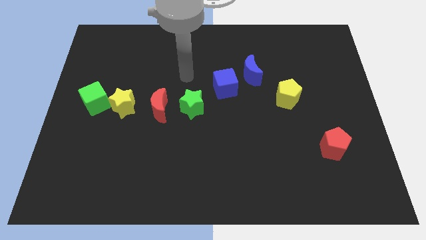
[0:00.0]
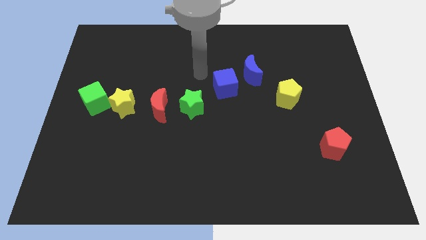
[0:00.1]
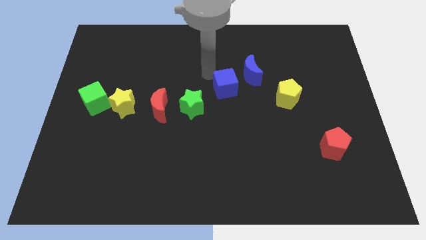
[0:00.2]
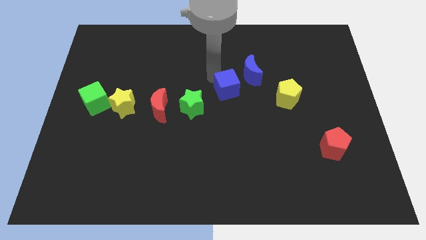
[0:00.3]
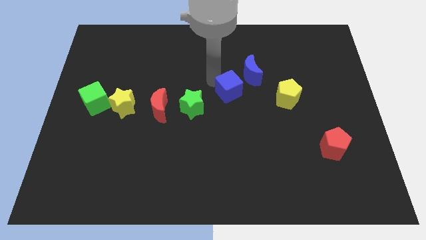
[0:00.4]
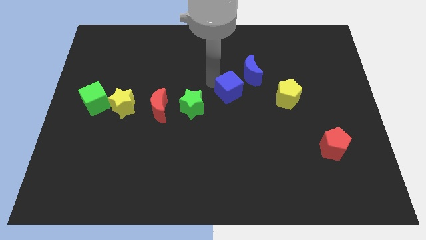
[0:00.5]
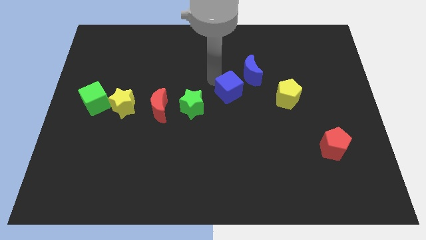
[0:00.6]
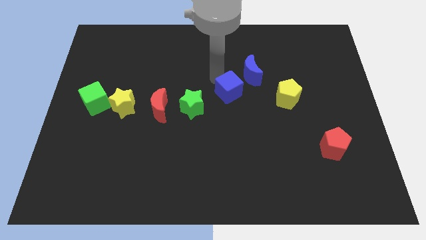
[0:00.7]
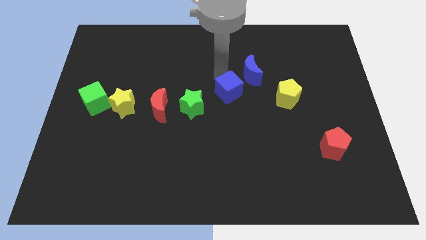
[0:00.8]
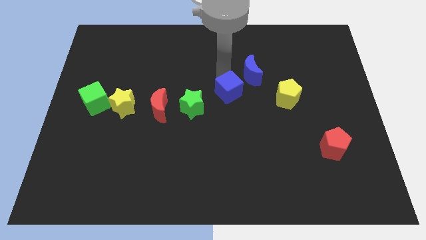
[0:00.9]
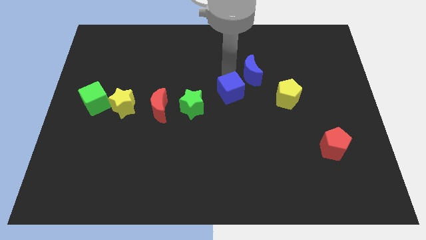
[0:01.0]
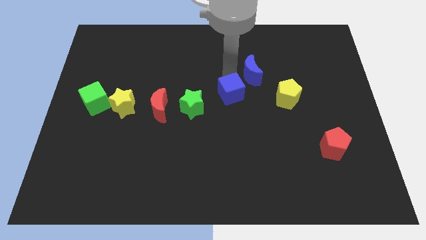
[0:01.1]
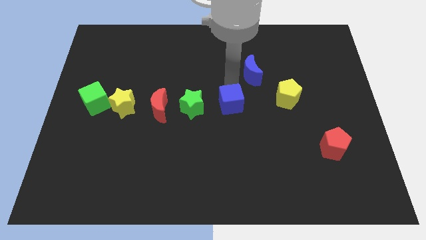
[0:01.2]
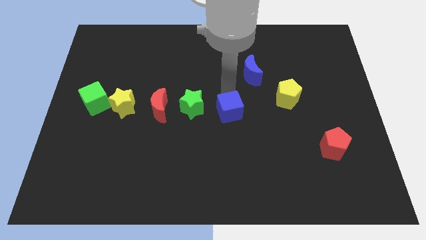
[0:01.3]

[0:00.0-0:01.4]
move the blue cube to the center of the board

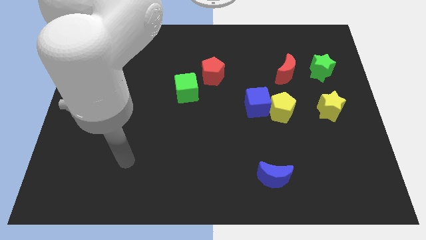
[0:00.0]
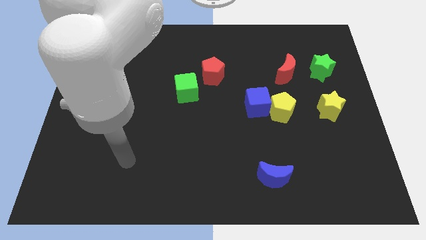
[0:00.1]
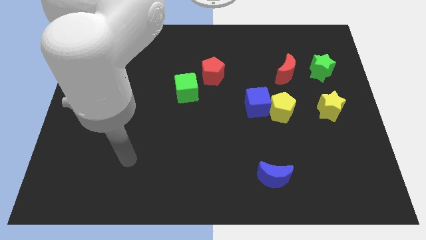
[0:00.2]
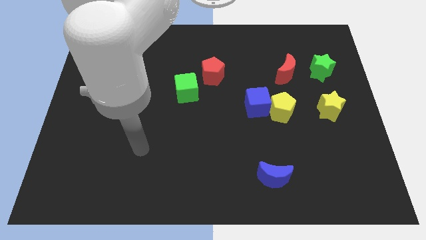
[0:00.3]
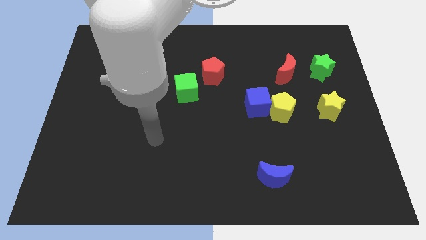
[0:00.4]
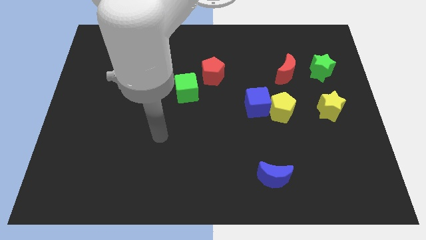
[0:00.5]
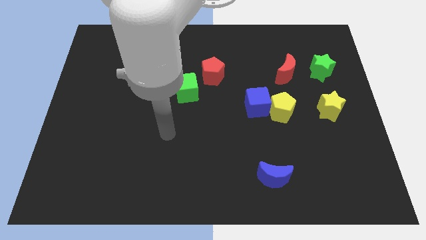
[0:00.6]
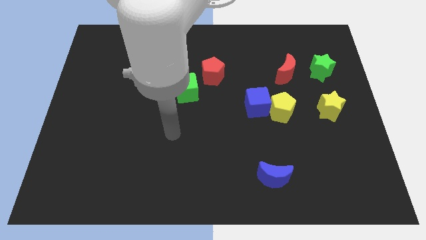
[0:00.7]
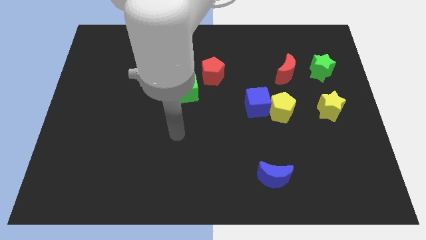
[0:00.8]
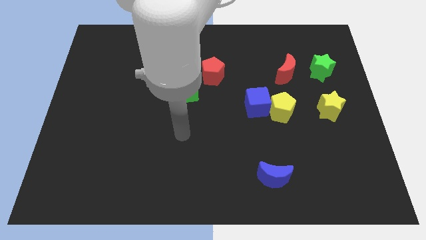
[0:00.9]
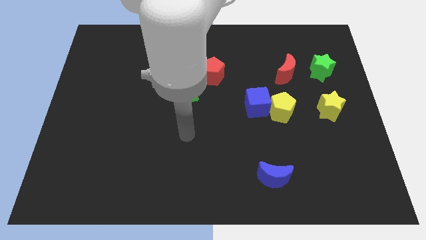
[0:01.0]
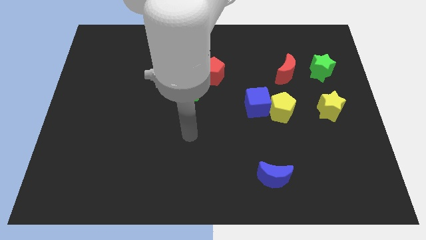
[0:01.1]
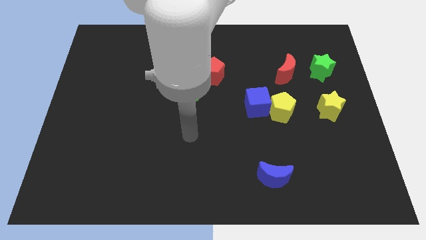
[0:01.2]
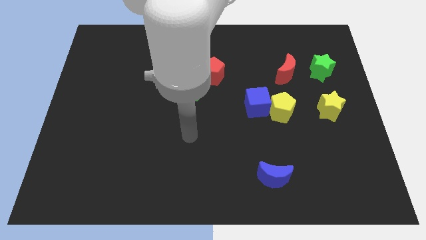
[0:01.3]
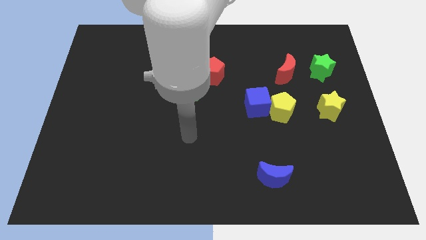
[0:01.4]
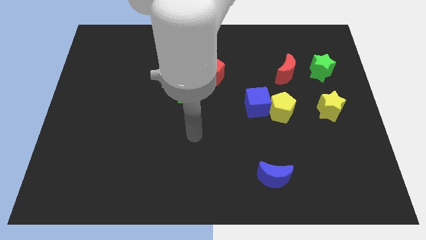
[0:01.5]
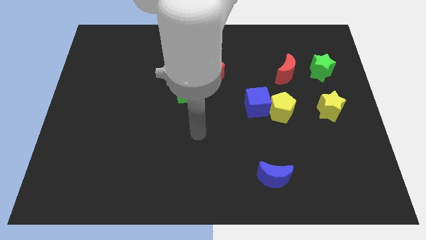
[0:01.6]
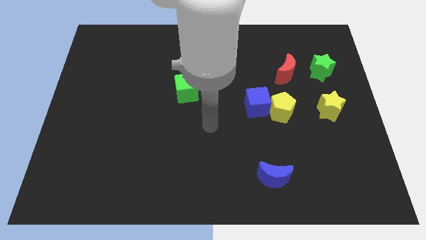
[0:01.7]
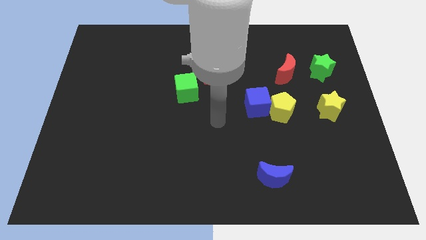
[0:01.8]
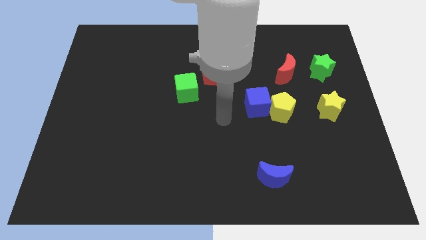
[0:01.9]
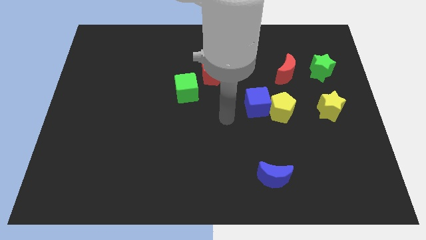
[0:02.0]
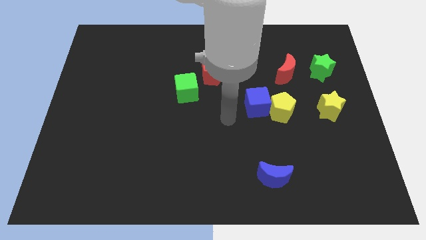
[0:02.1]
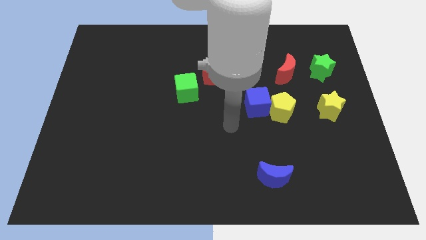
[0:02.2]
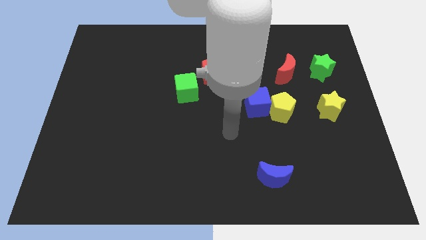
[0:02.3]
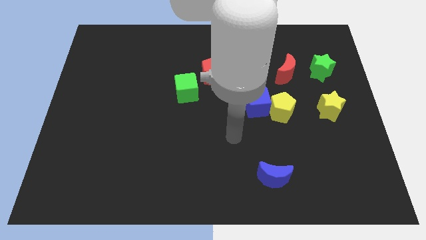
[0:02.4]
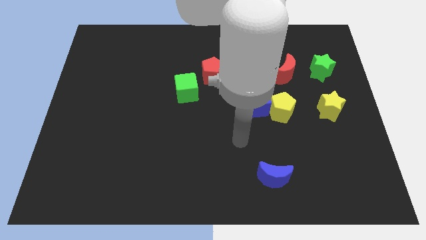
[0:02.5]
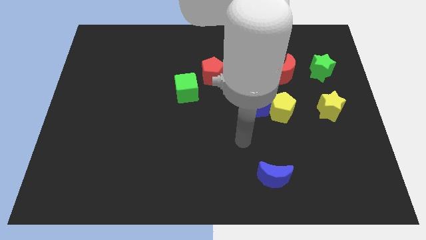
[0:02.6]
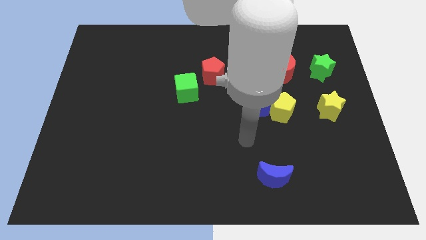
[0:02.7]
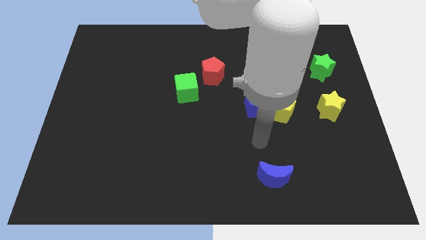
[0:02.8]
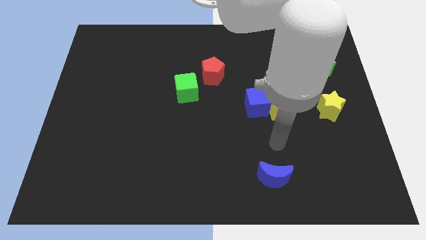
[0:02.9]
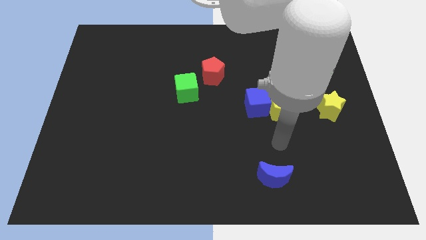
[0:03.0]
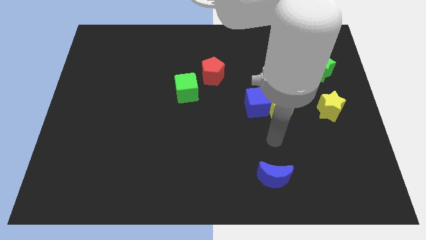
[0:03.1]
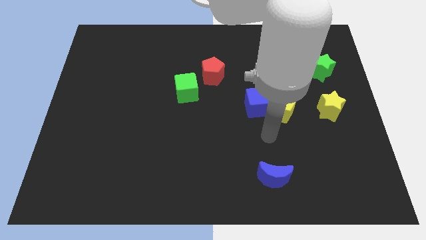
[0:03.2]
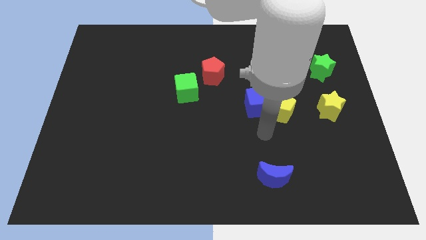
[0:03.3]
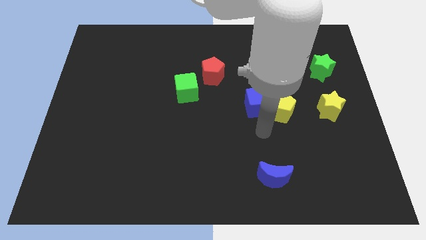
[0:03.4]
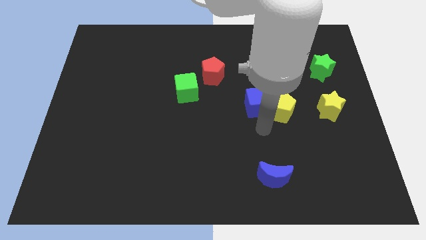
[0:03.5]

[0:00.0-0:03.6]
point your arm at the bottom of the blue cube

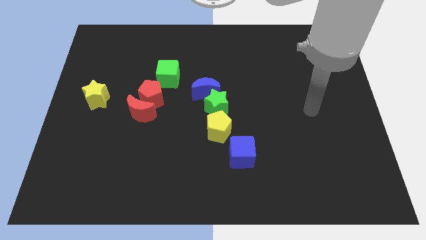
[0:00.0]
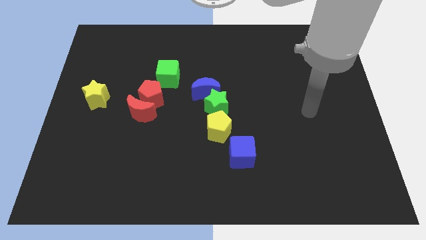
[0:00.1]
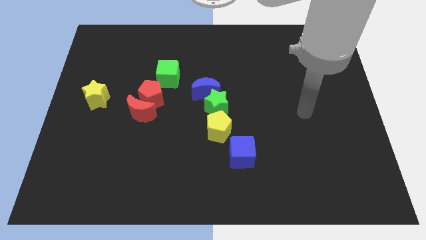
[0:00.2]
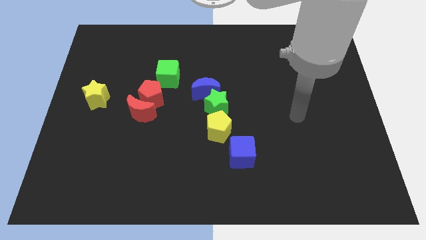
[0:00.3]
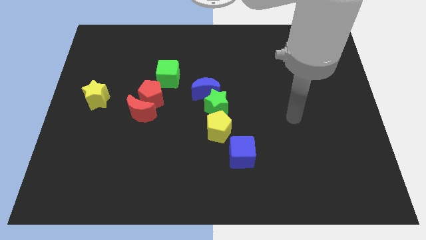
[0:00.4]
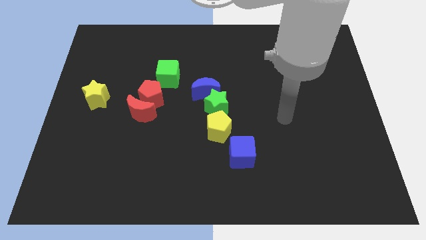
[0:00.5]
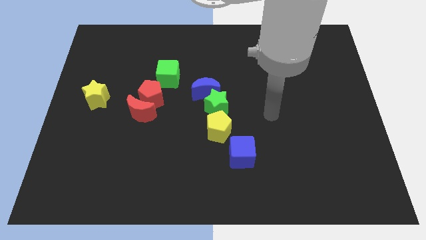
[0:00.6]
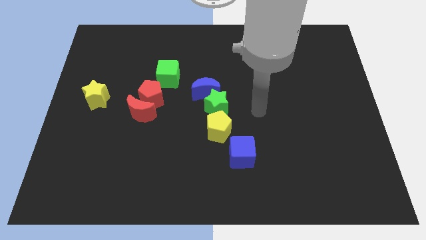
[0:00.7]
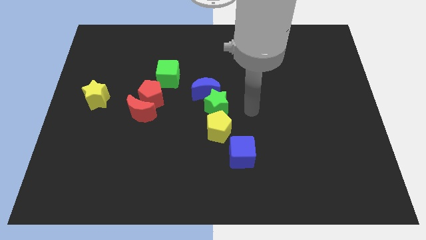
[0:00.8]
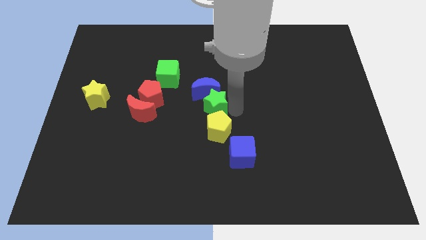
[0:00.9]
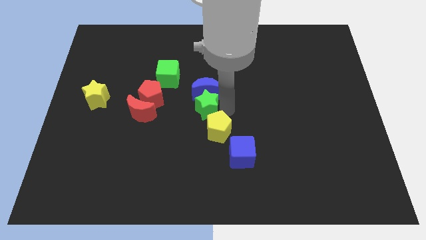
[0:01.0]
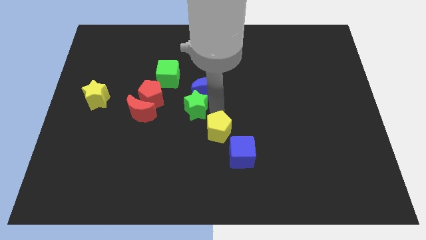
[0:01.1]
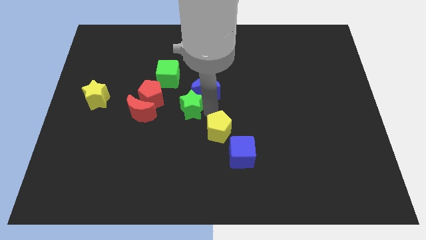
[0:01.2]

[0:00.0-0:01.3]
push the green star slightly to the left

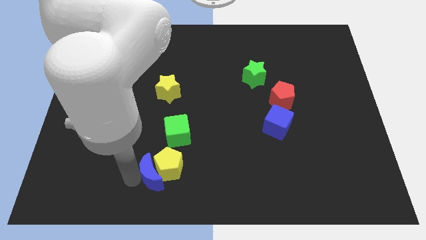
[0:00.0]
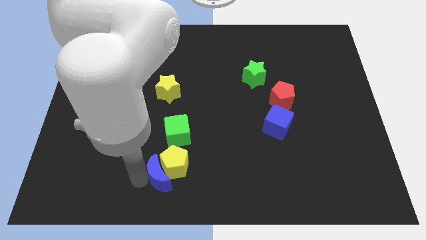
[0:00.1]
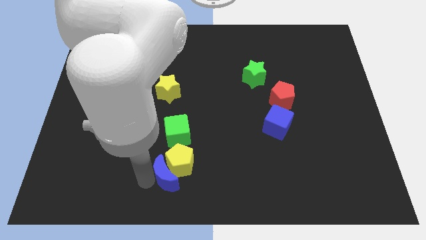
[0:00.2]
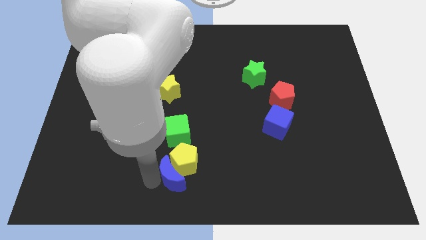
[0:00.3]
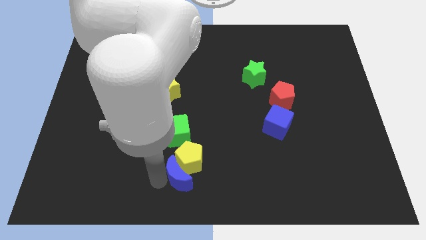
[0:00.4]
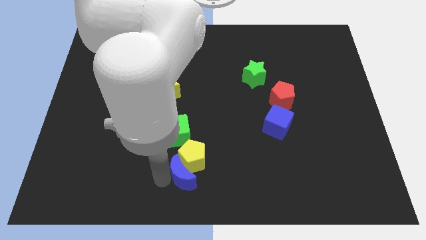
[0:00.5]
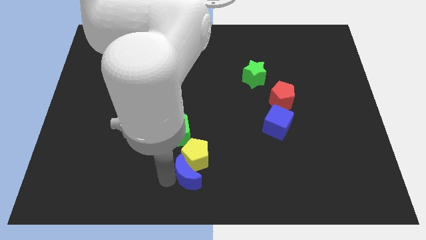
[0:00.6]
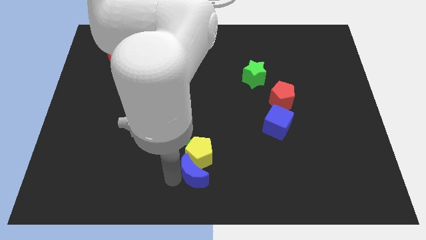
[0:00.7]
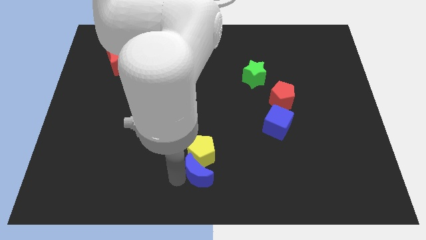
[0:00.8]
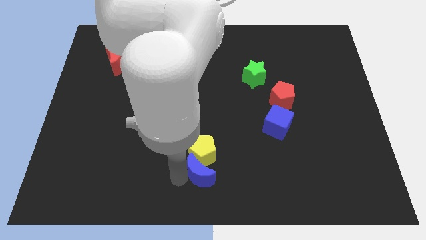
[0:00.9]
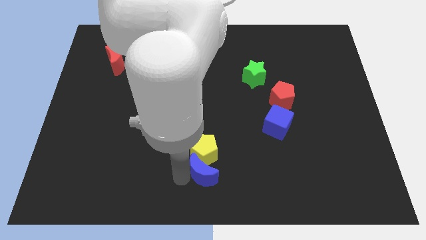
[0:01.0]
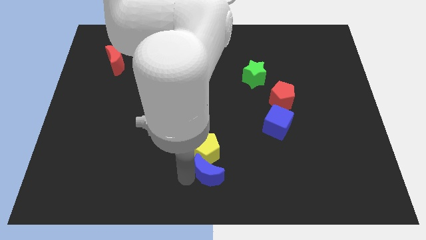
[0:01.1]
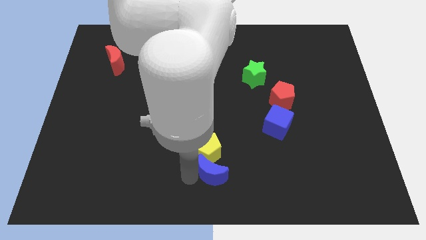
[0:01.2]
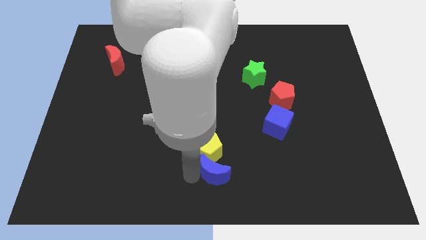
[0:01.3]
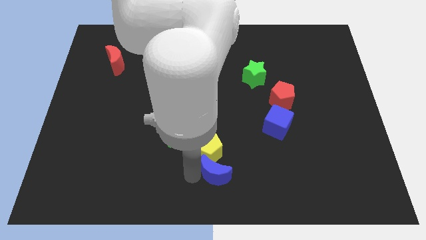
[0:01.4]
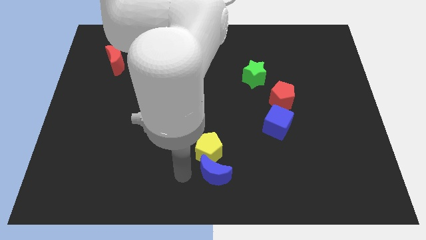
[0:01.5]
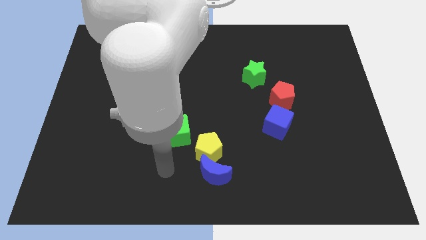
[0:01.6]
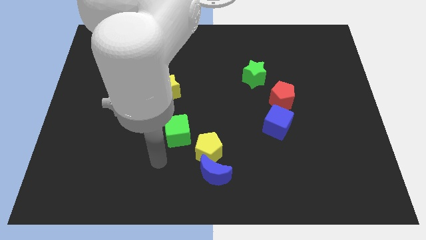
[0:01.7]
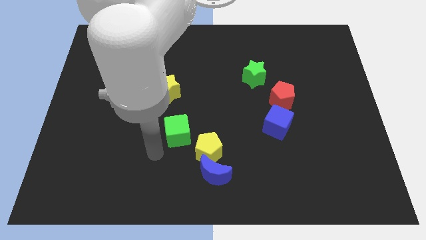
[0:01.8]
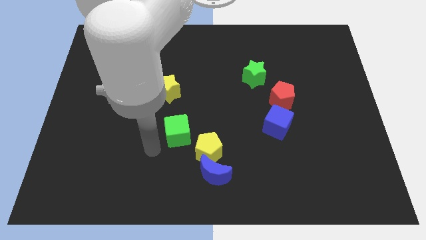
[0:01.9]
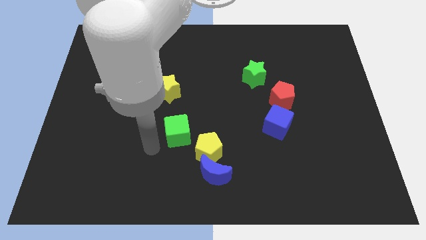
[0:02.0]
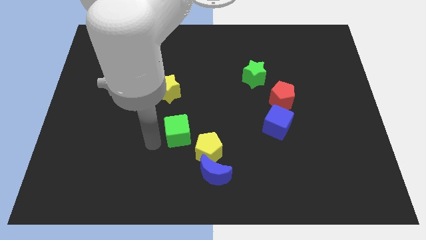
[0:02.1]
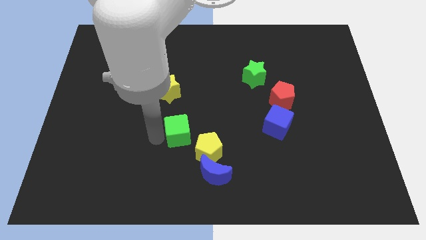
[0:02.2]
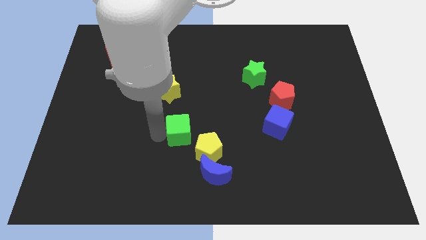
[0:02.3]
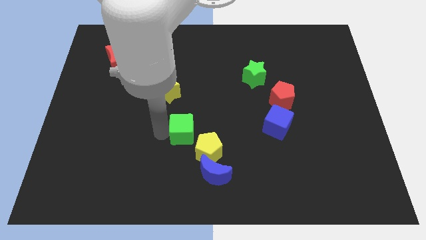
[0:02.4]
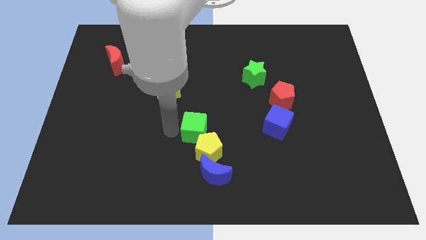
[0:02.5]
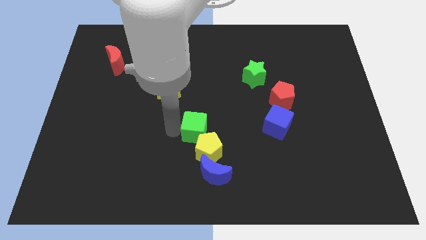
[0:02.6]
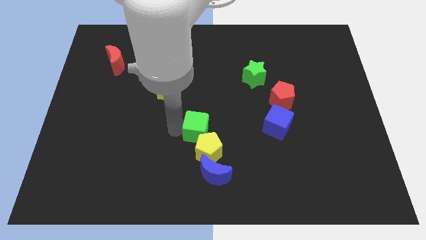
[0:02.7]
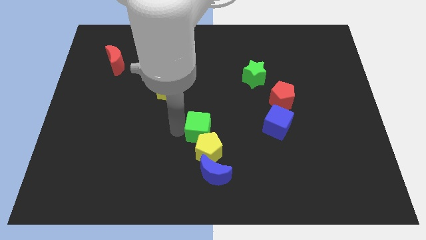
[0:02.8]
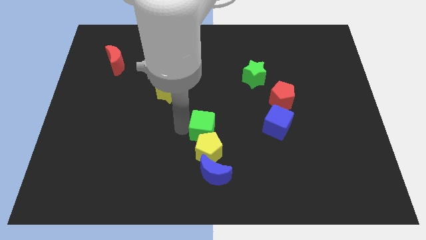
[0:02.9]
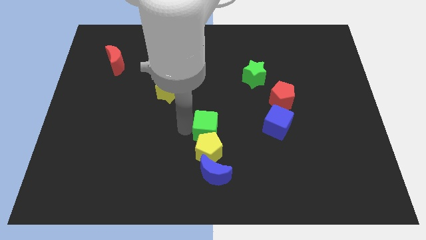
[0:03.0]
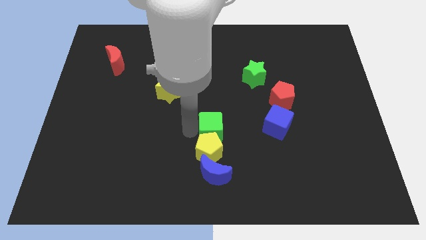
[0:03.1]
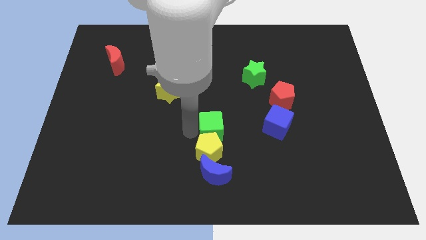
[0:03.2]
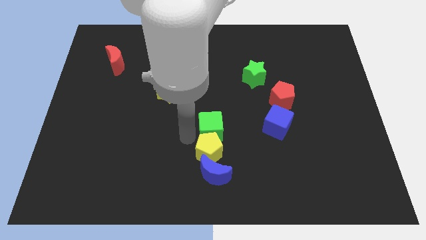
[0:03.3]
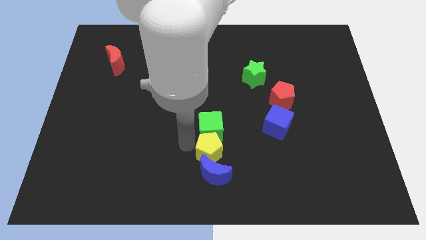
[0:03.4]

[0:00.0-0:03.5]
move the green cube above the yellow pentagon
